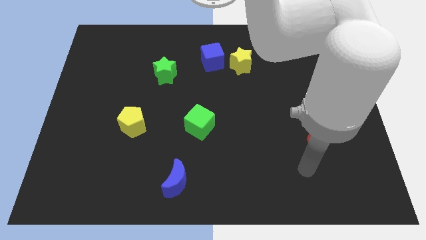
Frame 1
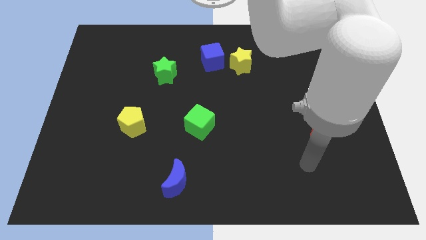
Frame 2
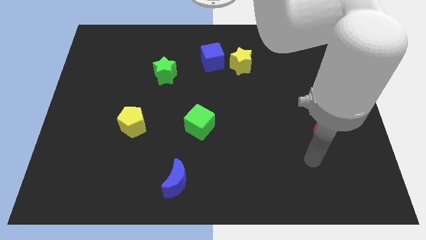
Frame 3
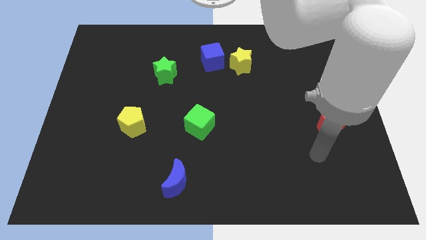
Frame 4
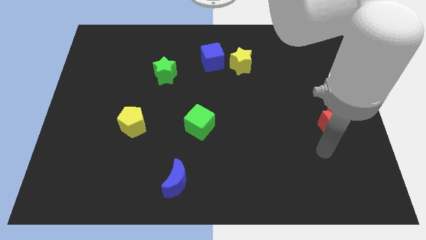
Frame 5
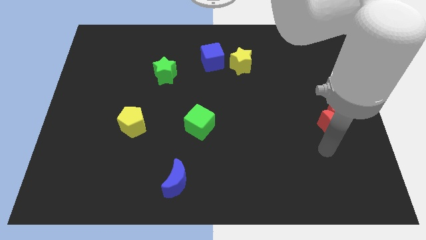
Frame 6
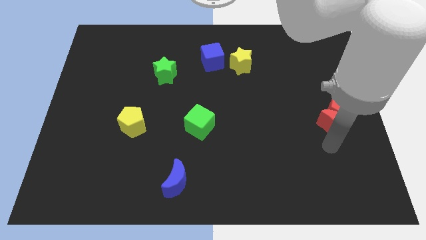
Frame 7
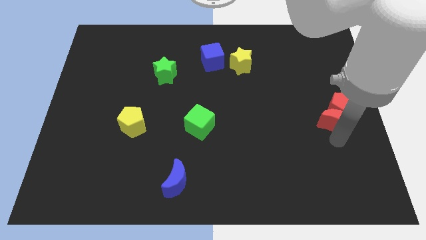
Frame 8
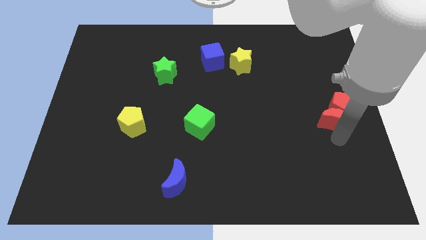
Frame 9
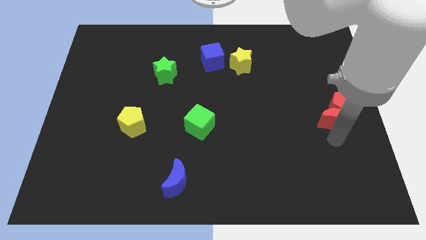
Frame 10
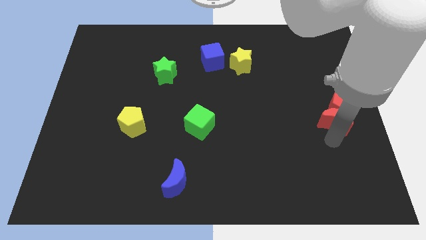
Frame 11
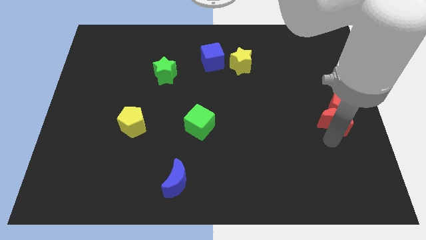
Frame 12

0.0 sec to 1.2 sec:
place the red crescent below the red pentagon

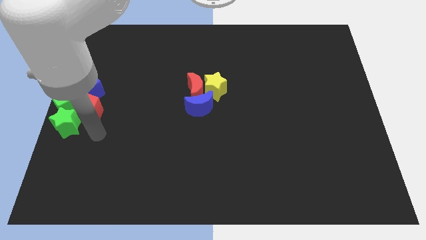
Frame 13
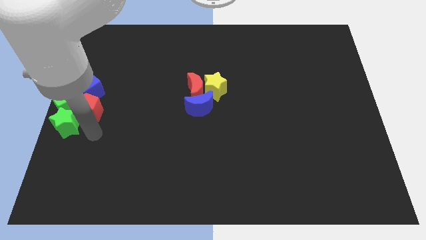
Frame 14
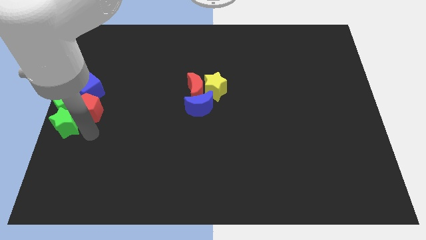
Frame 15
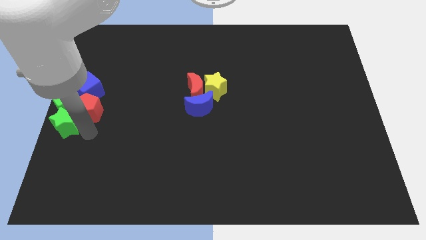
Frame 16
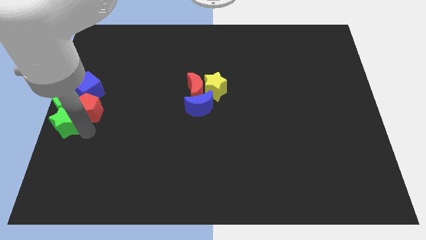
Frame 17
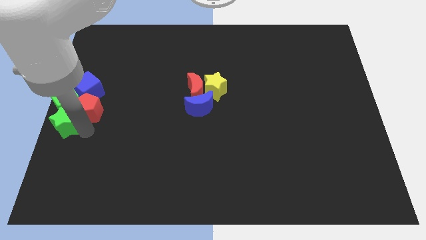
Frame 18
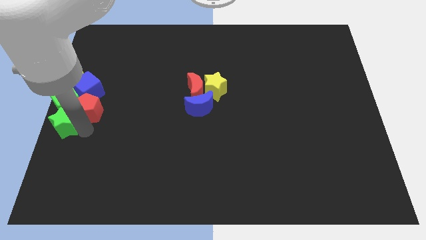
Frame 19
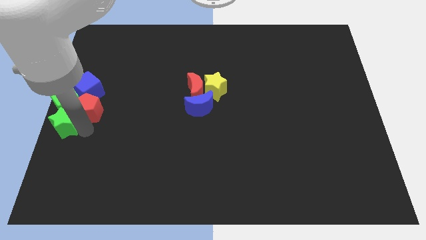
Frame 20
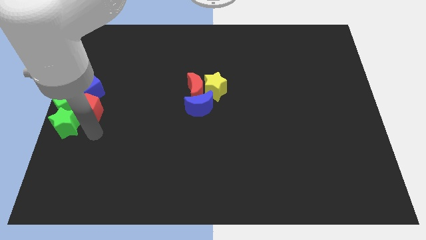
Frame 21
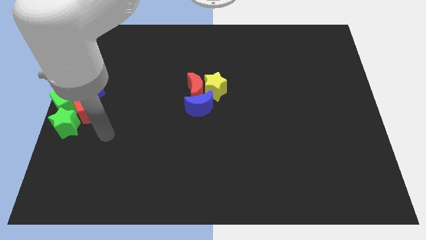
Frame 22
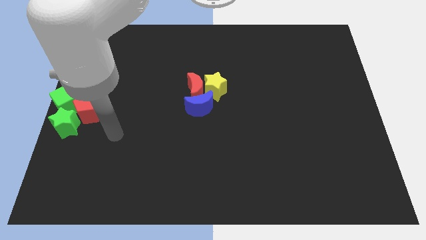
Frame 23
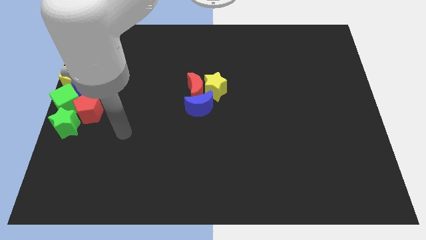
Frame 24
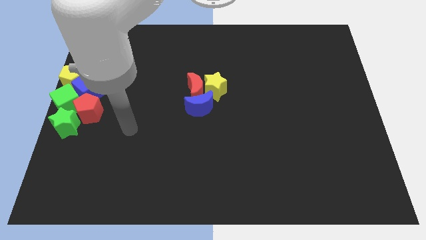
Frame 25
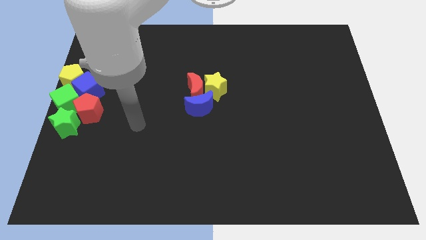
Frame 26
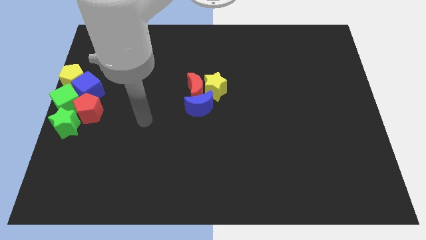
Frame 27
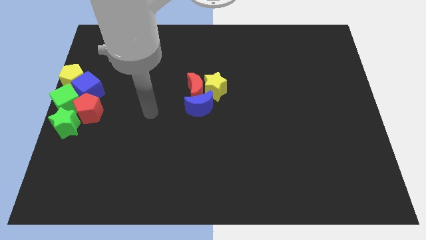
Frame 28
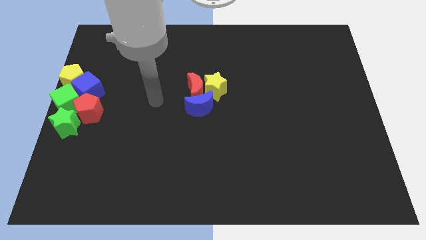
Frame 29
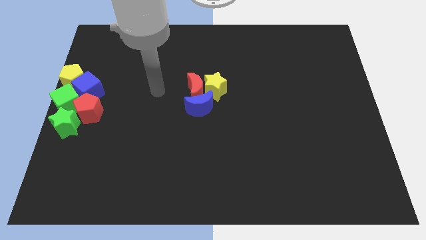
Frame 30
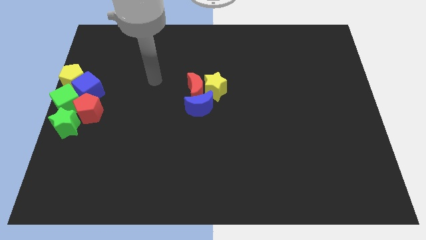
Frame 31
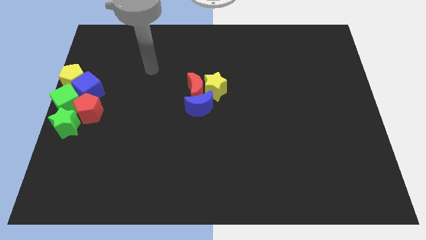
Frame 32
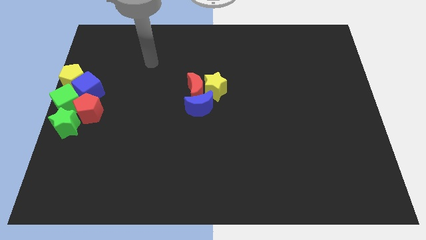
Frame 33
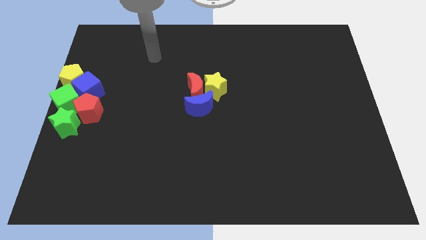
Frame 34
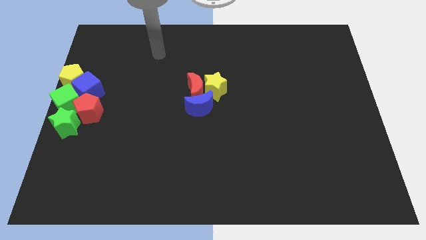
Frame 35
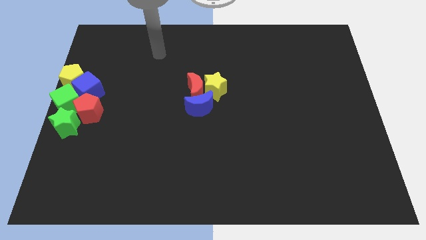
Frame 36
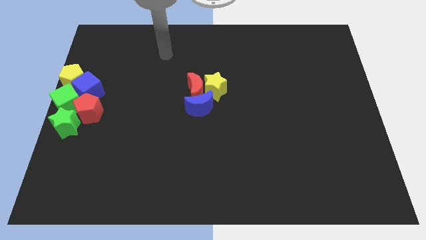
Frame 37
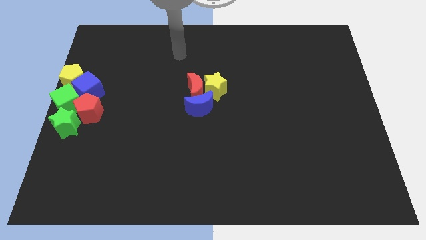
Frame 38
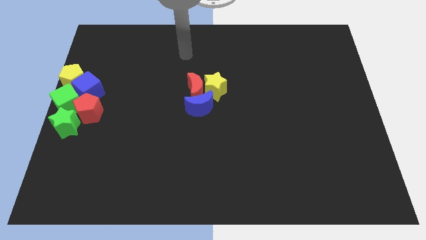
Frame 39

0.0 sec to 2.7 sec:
move arm away from the blocks

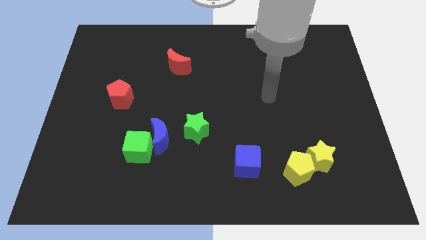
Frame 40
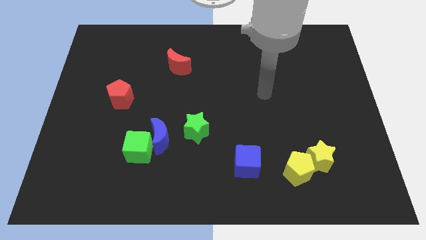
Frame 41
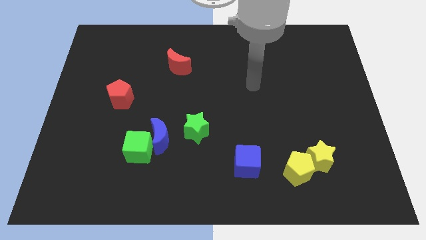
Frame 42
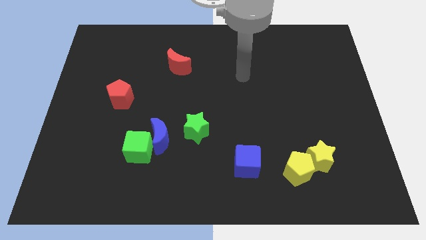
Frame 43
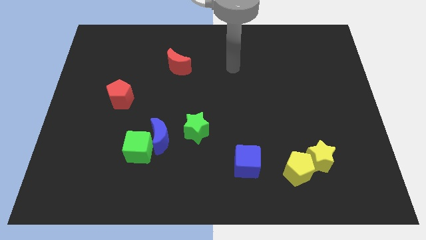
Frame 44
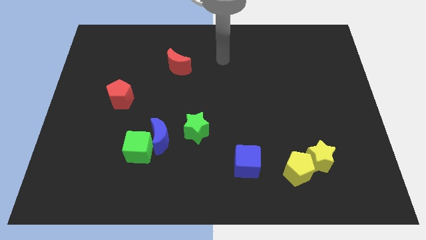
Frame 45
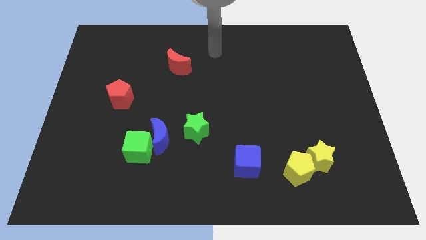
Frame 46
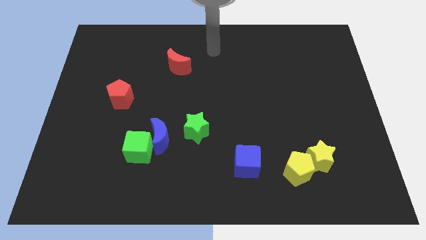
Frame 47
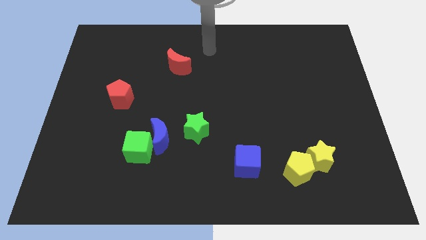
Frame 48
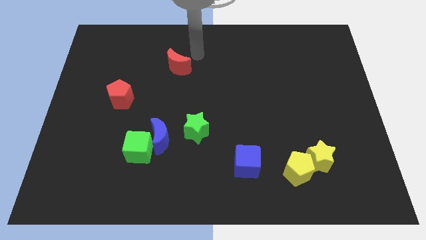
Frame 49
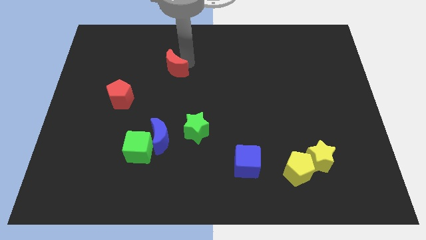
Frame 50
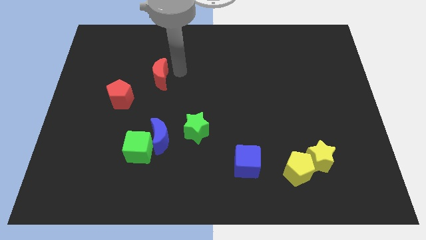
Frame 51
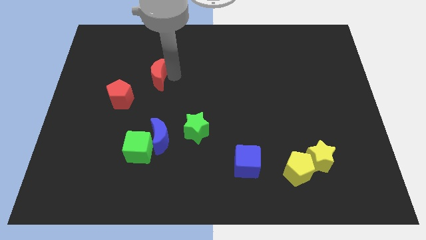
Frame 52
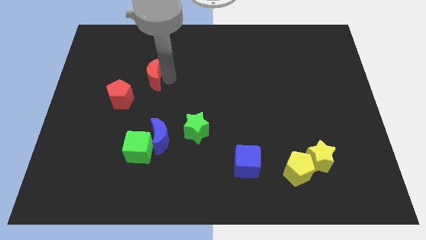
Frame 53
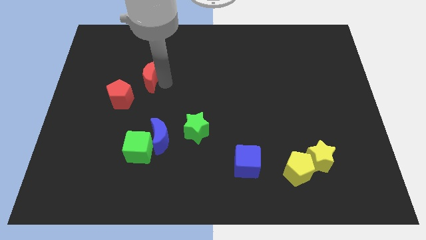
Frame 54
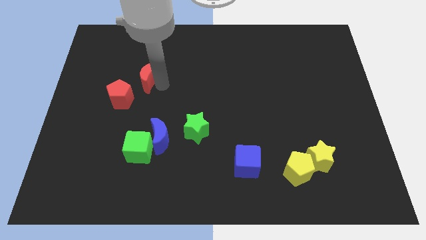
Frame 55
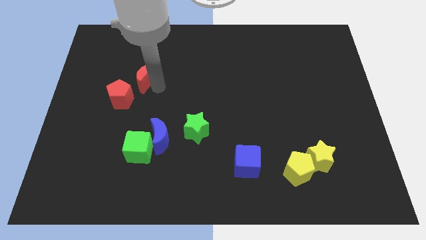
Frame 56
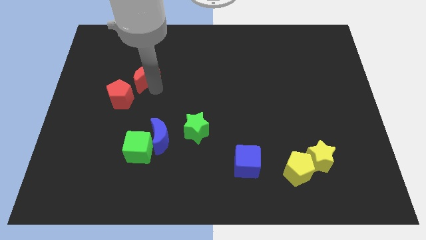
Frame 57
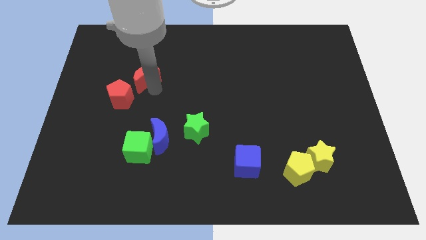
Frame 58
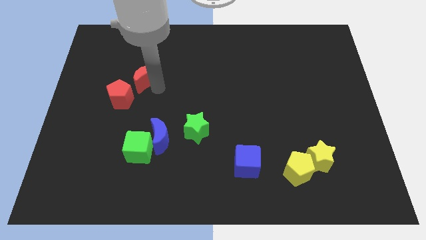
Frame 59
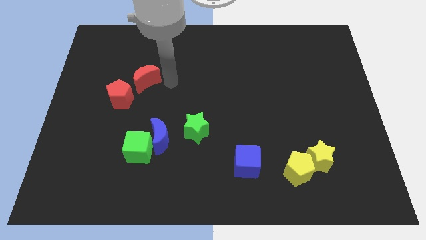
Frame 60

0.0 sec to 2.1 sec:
move the red moon close to the red pentagon

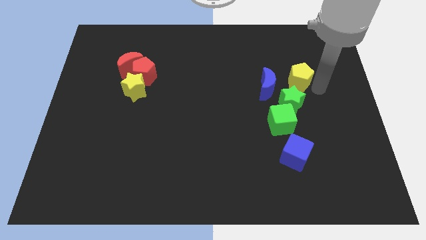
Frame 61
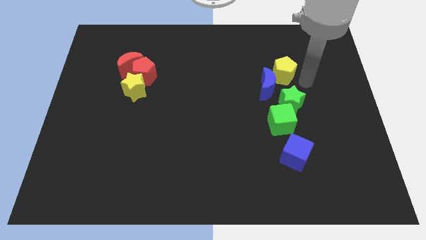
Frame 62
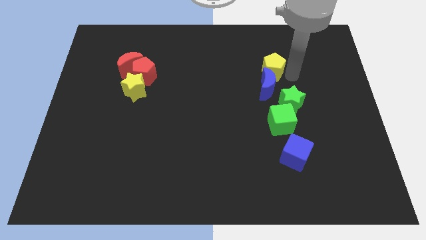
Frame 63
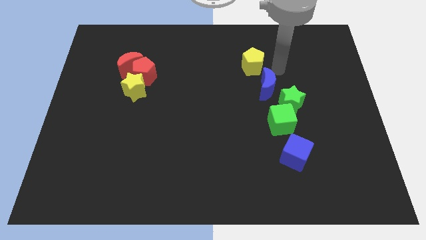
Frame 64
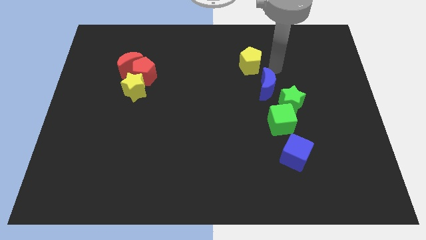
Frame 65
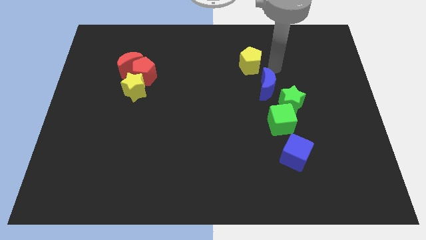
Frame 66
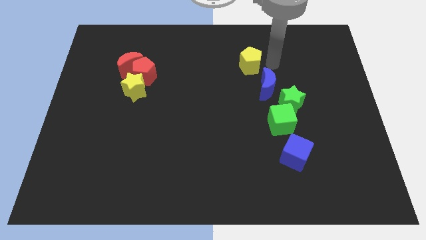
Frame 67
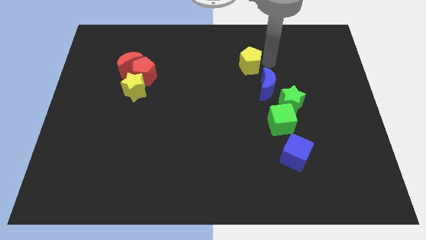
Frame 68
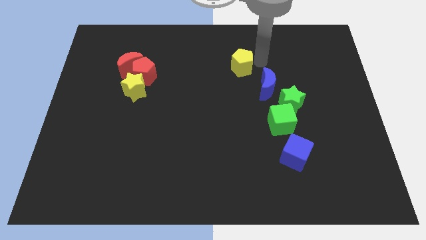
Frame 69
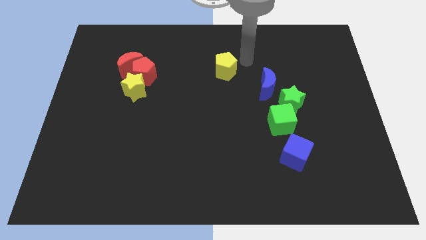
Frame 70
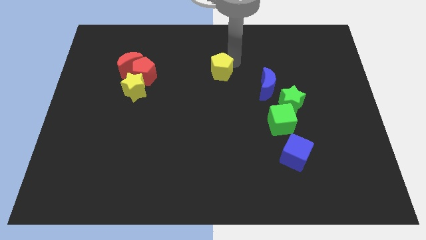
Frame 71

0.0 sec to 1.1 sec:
move the yellow pentagon to the left of the board

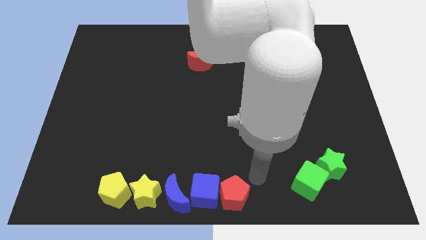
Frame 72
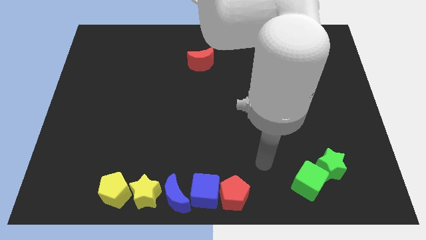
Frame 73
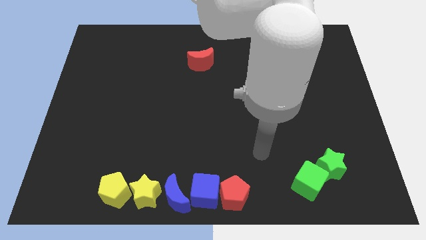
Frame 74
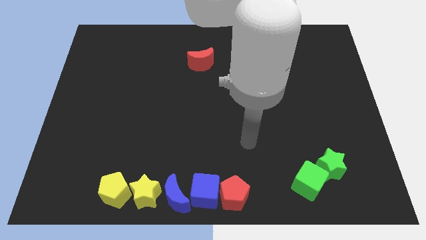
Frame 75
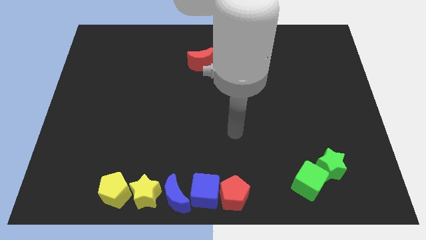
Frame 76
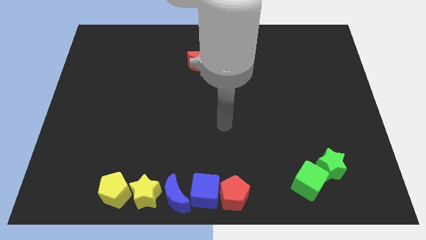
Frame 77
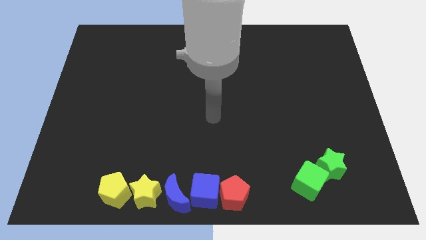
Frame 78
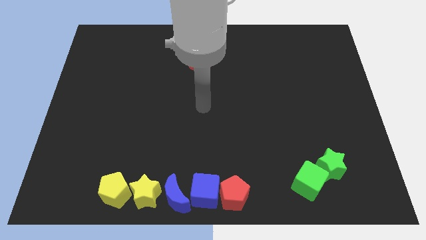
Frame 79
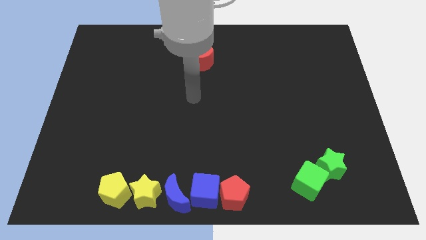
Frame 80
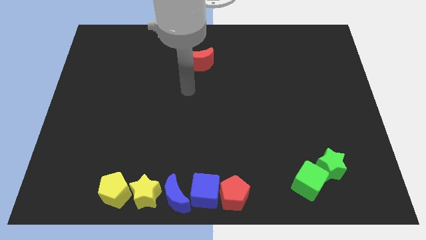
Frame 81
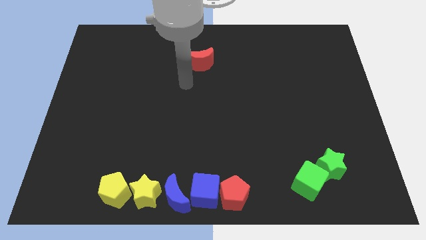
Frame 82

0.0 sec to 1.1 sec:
go away from the red pentagin

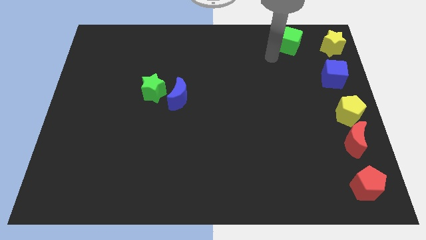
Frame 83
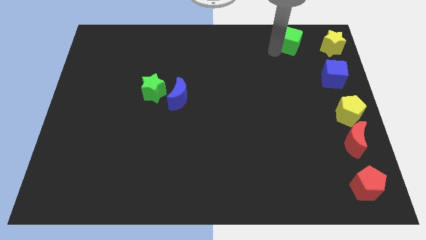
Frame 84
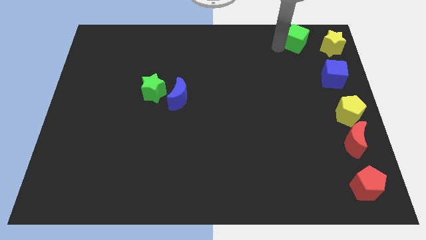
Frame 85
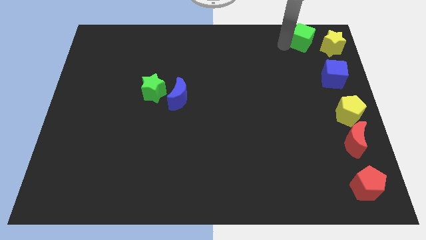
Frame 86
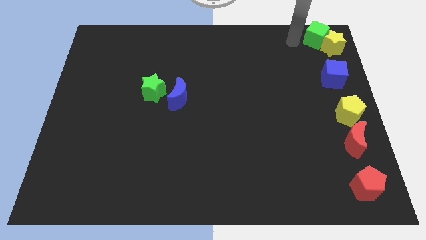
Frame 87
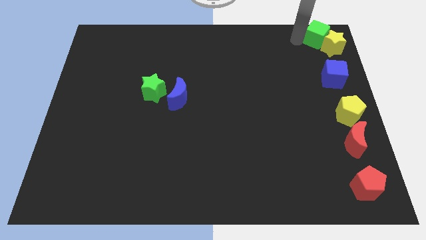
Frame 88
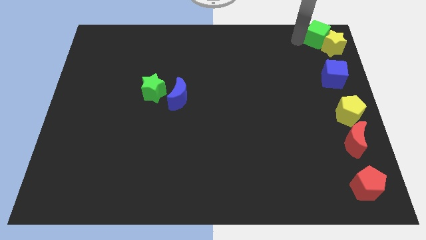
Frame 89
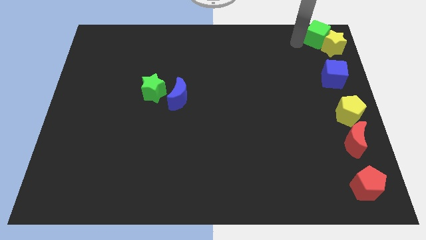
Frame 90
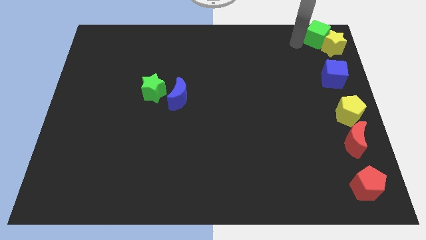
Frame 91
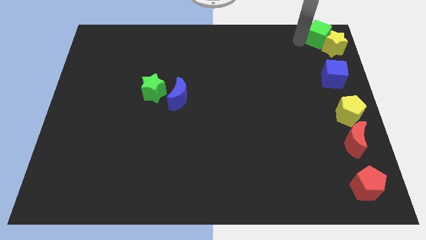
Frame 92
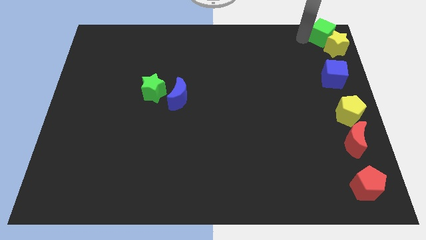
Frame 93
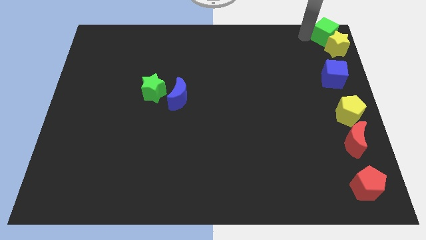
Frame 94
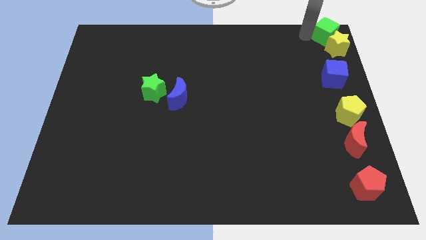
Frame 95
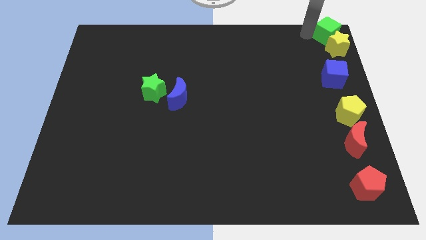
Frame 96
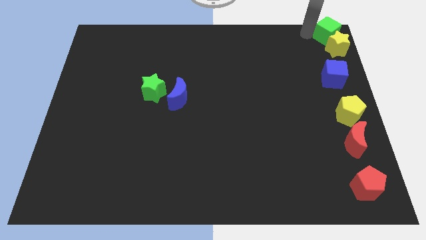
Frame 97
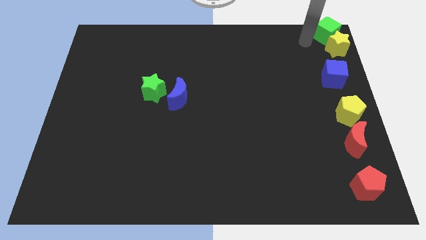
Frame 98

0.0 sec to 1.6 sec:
place the green cube above the yellow star
